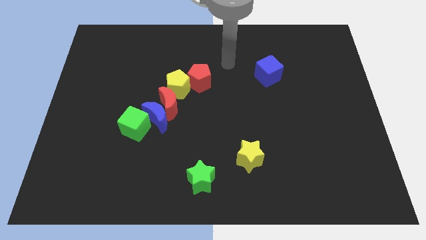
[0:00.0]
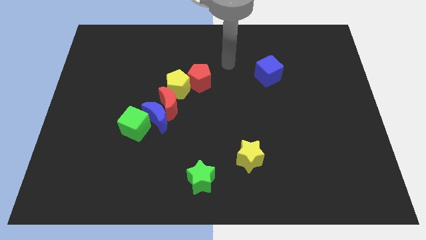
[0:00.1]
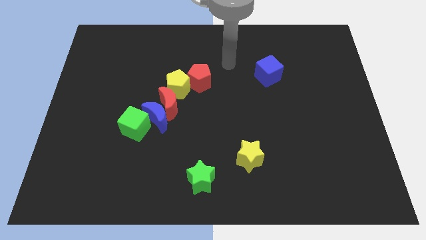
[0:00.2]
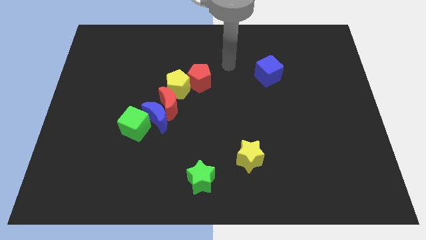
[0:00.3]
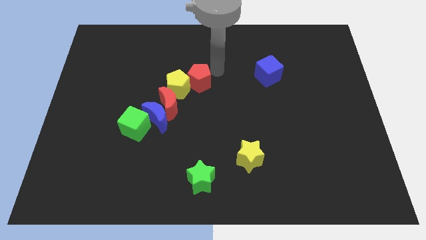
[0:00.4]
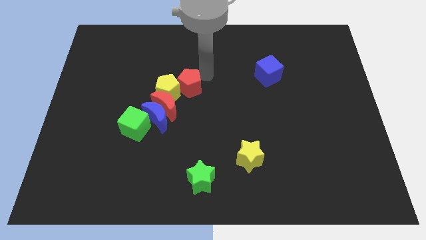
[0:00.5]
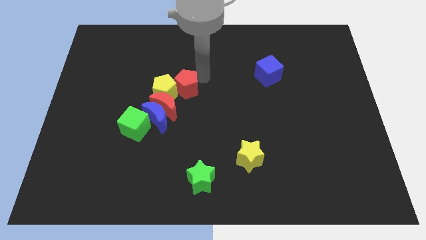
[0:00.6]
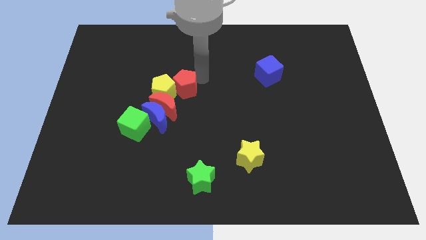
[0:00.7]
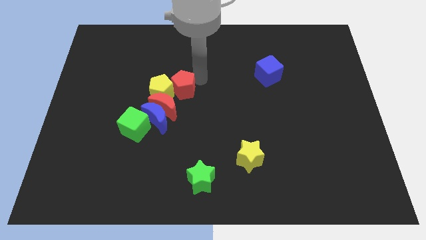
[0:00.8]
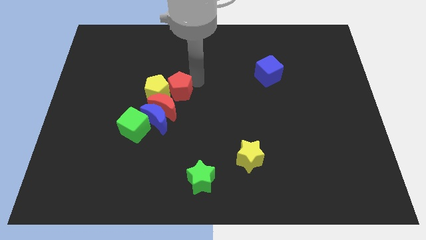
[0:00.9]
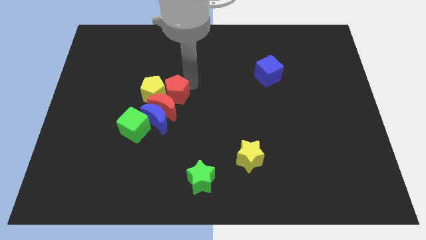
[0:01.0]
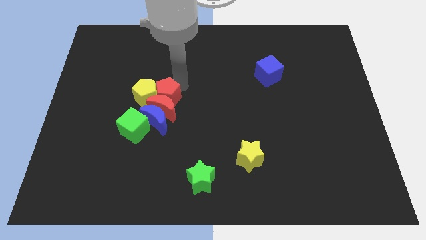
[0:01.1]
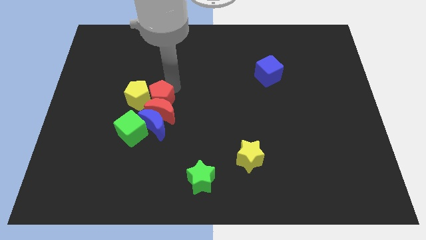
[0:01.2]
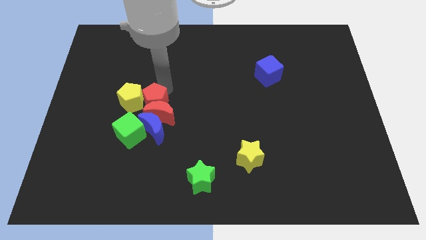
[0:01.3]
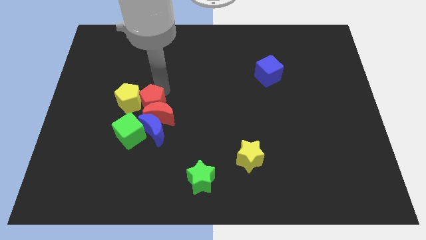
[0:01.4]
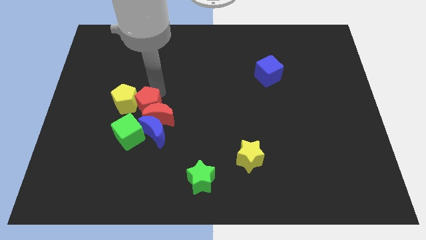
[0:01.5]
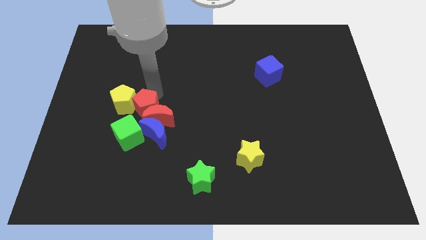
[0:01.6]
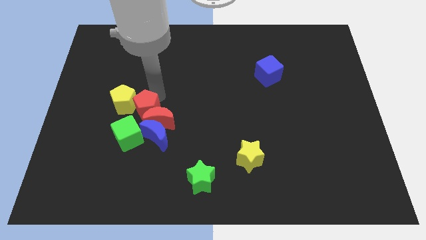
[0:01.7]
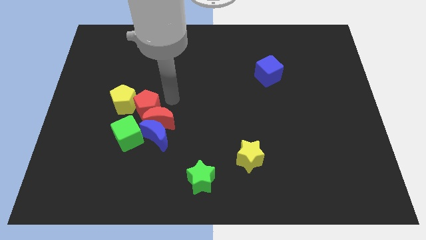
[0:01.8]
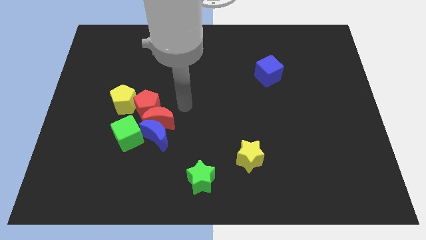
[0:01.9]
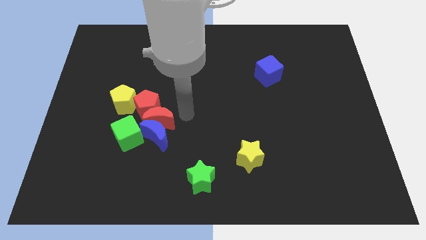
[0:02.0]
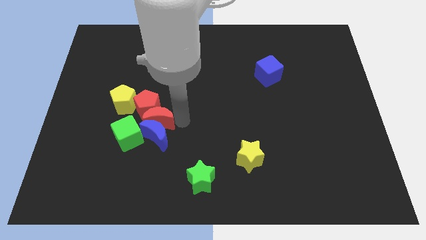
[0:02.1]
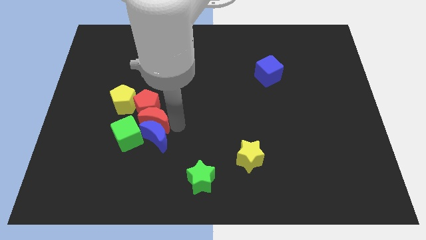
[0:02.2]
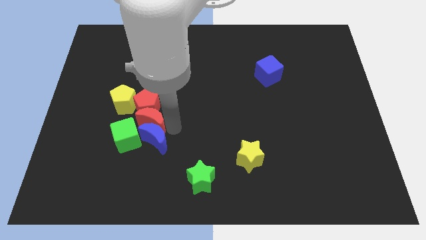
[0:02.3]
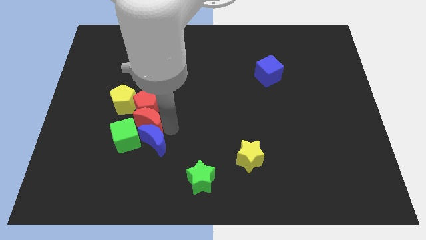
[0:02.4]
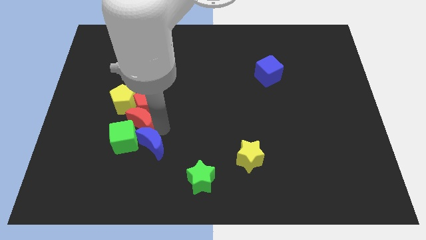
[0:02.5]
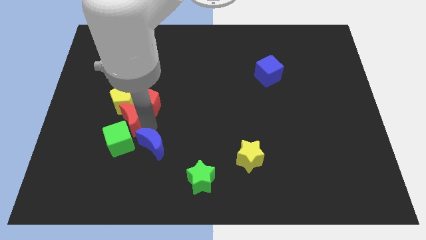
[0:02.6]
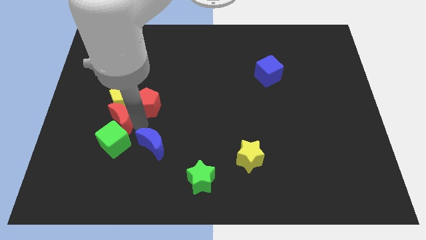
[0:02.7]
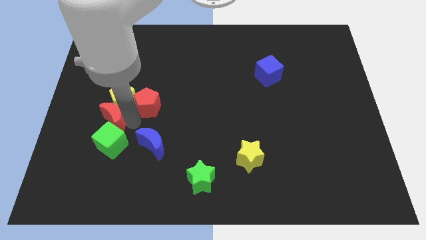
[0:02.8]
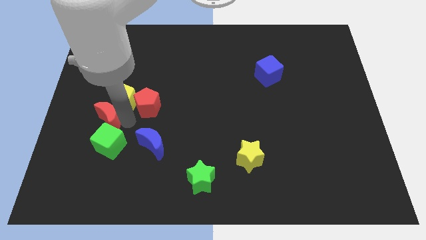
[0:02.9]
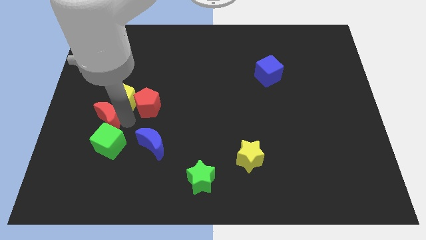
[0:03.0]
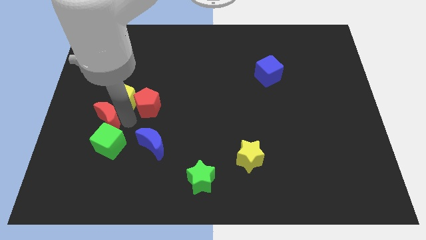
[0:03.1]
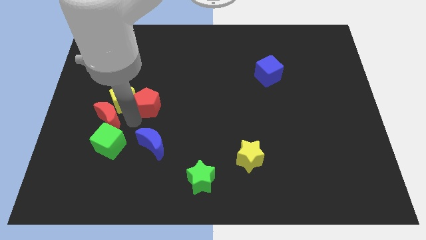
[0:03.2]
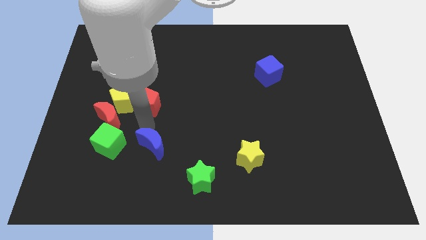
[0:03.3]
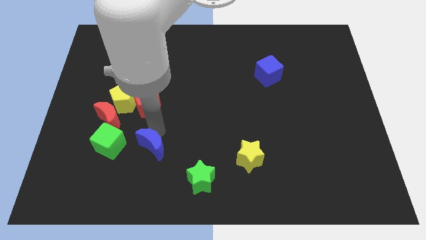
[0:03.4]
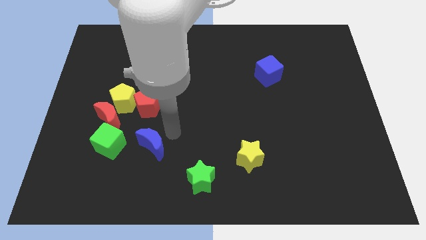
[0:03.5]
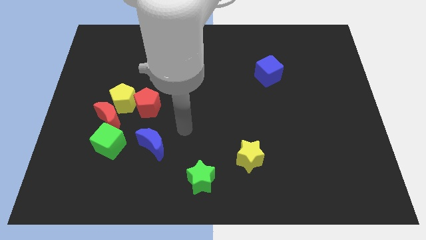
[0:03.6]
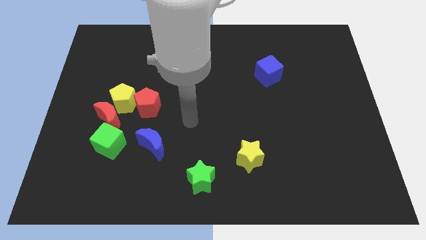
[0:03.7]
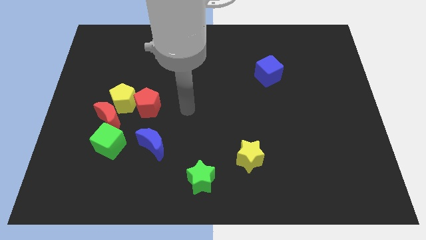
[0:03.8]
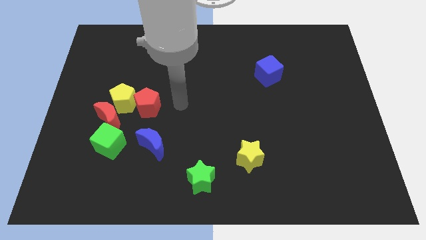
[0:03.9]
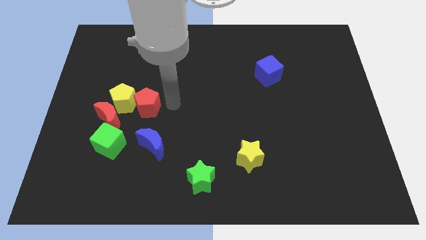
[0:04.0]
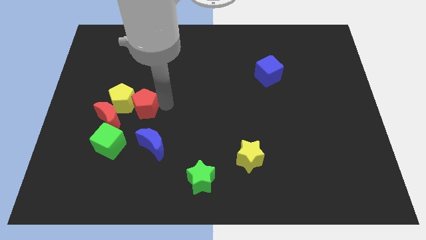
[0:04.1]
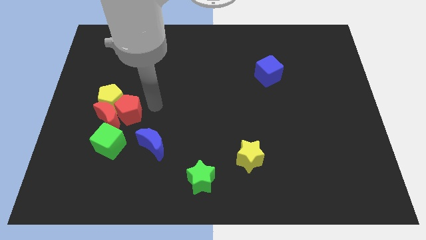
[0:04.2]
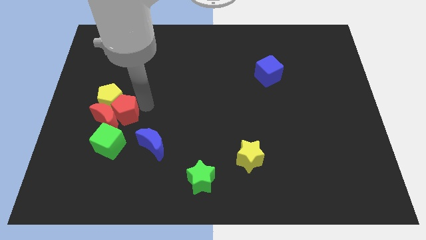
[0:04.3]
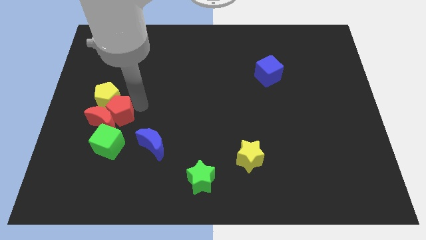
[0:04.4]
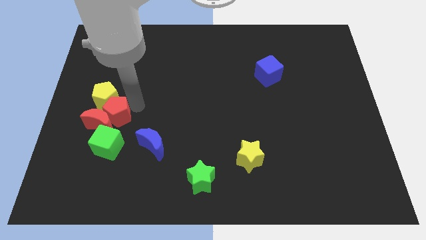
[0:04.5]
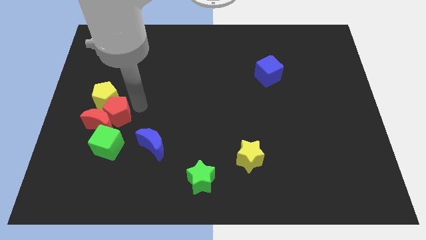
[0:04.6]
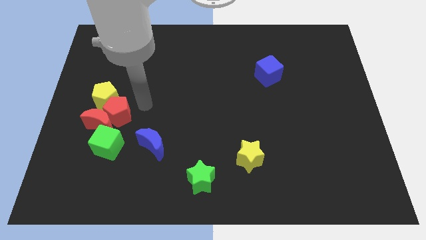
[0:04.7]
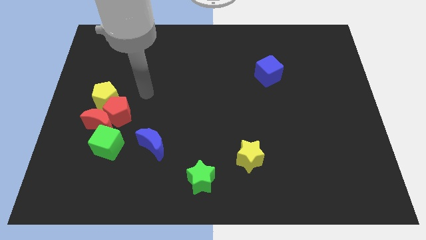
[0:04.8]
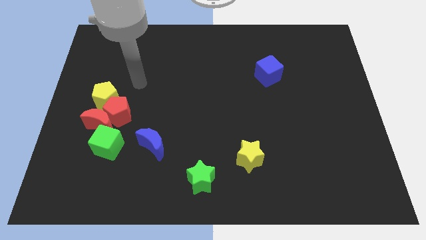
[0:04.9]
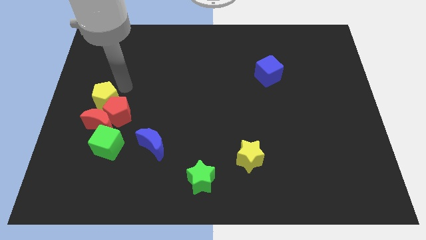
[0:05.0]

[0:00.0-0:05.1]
collapse the group of blocks which are in a horizontal line

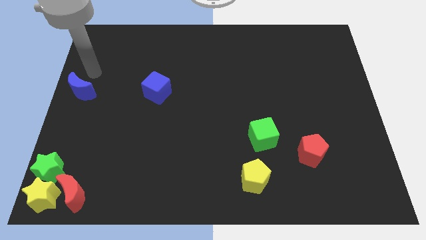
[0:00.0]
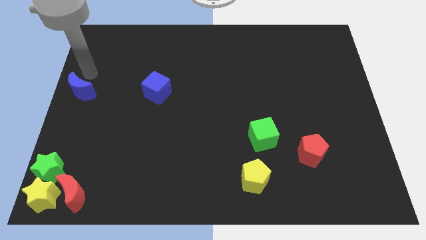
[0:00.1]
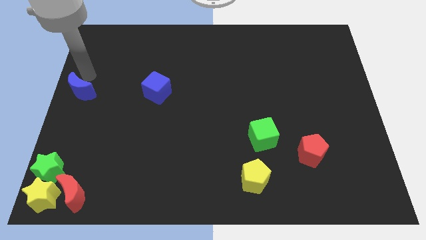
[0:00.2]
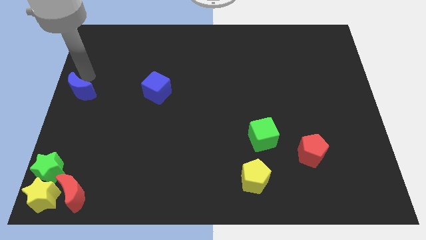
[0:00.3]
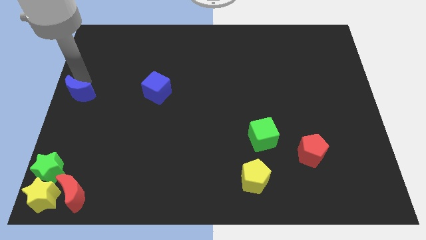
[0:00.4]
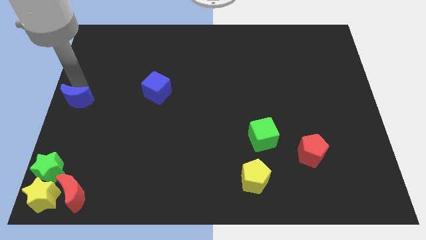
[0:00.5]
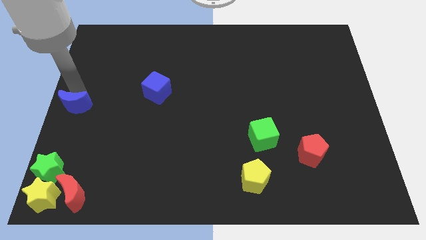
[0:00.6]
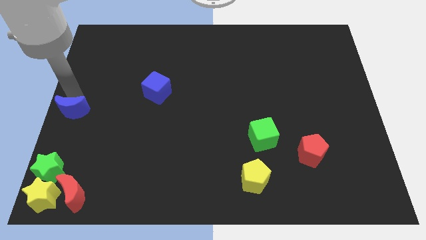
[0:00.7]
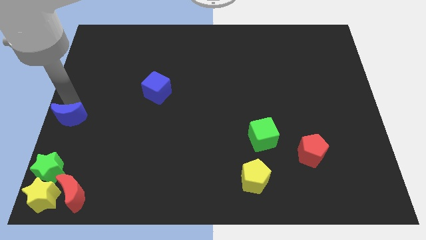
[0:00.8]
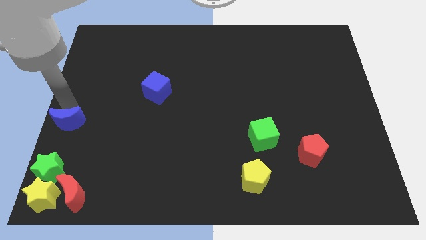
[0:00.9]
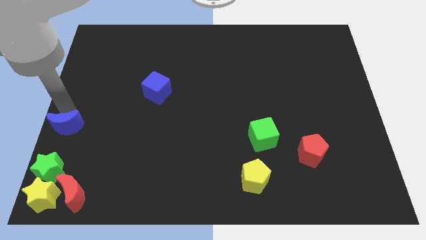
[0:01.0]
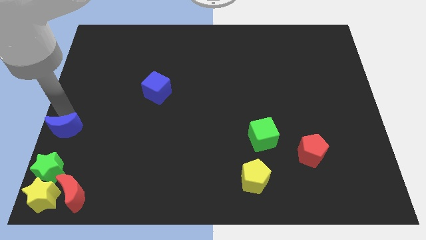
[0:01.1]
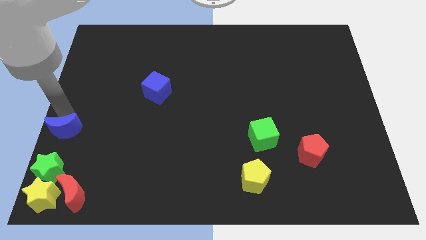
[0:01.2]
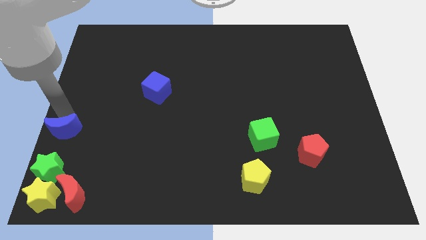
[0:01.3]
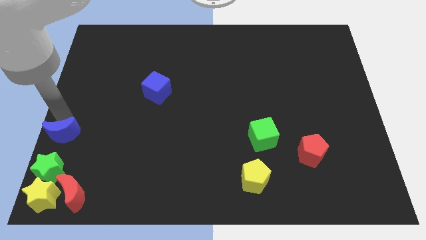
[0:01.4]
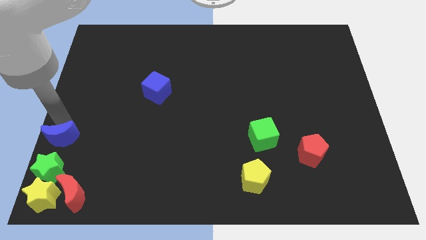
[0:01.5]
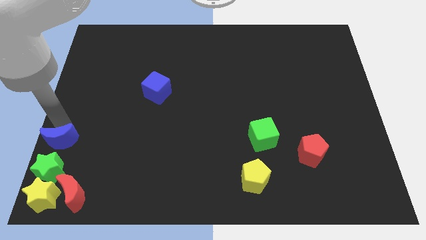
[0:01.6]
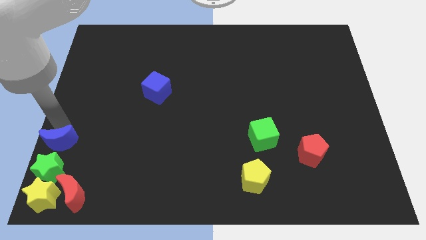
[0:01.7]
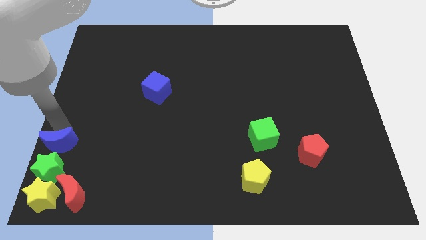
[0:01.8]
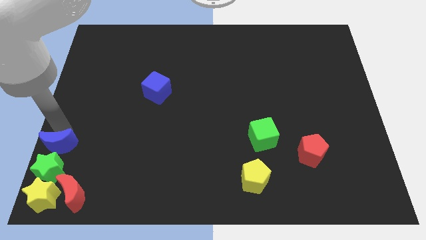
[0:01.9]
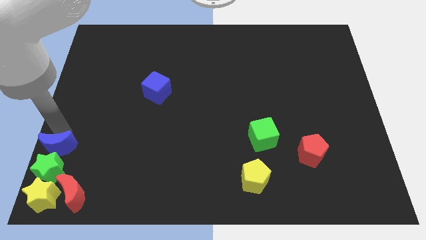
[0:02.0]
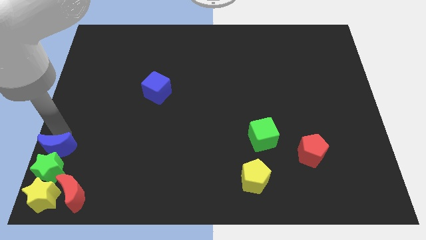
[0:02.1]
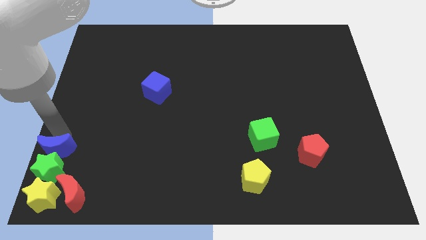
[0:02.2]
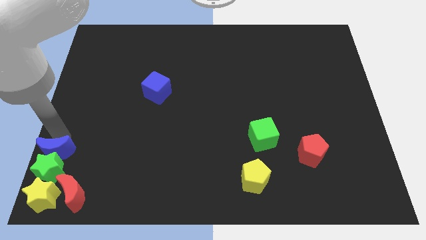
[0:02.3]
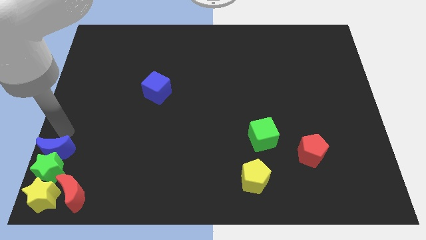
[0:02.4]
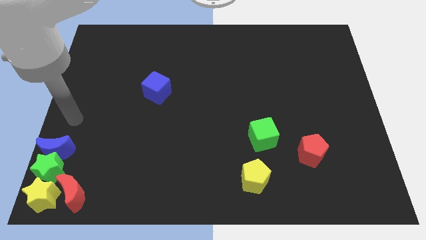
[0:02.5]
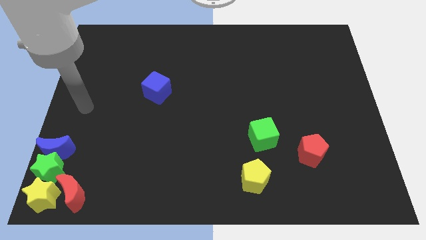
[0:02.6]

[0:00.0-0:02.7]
push the blue moon close to the green star

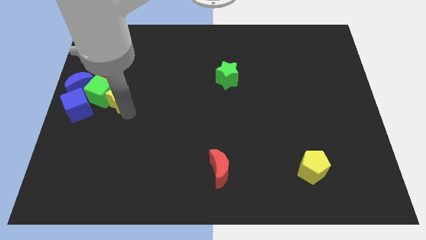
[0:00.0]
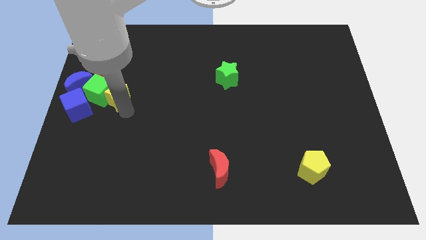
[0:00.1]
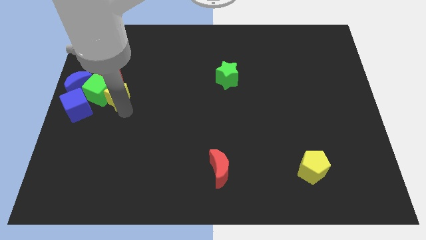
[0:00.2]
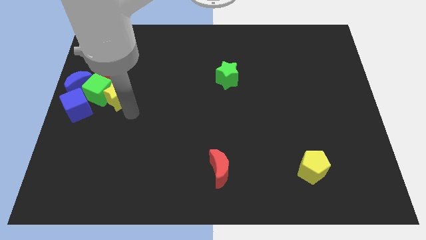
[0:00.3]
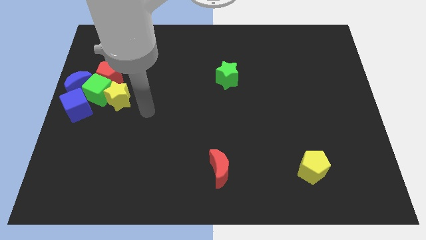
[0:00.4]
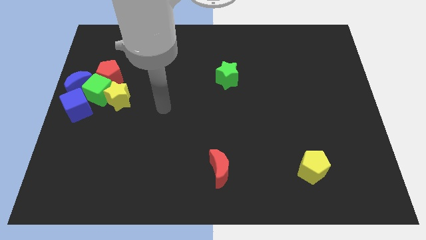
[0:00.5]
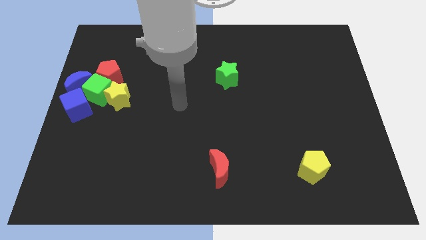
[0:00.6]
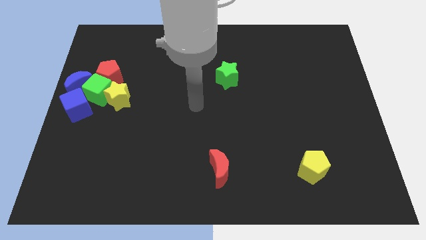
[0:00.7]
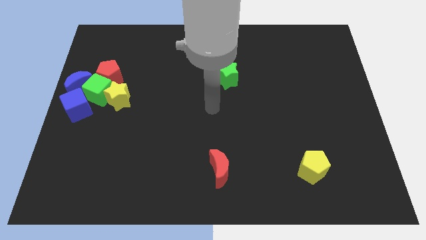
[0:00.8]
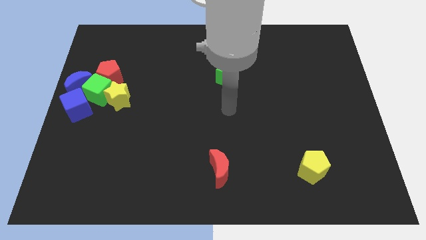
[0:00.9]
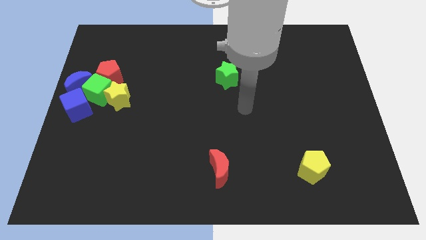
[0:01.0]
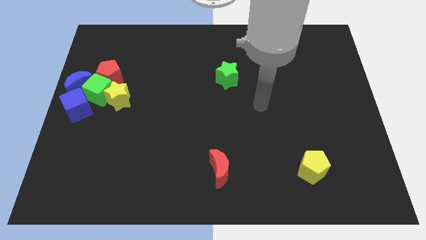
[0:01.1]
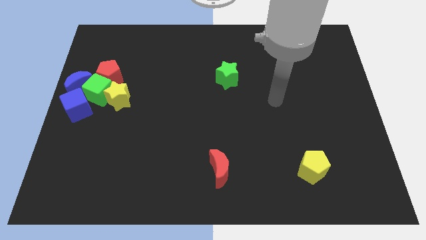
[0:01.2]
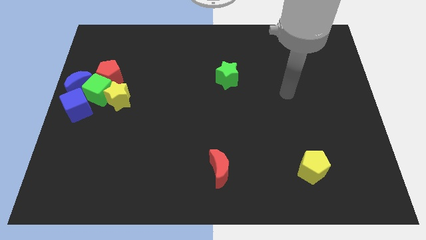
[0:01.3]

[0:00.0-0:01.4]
move your arm away from yellow star
